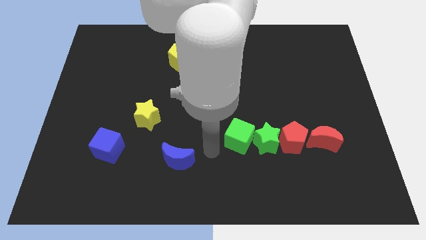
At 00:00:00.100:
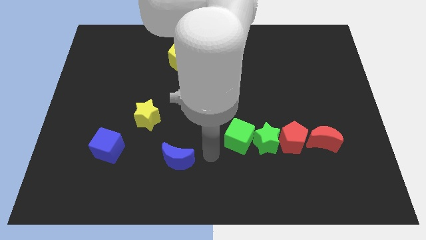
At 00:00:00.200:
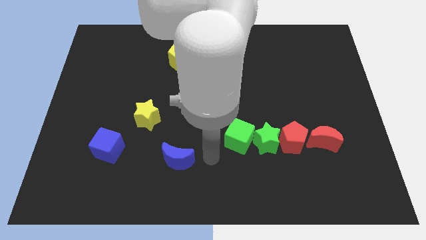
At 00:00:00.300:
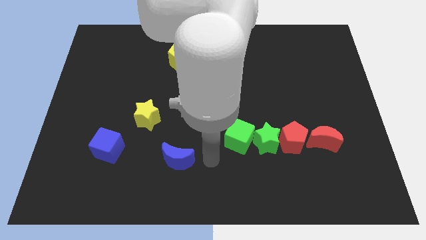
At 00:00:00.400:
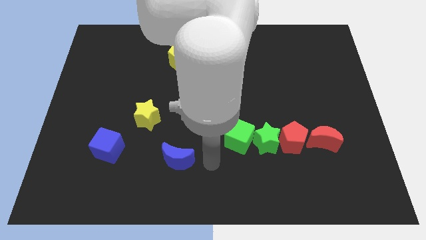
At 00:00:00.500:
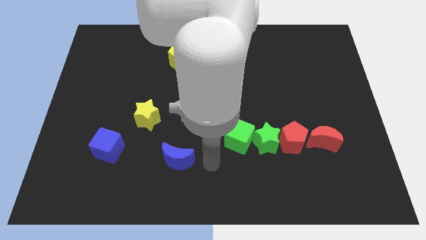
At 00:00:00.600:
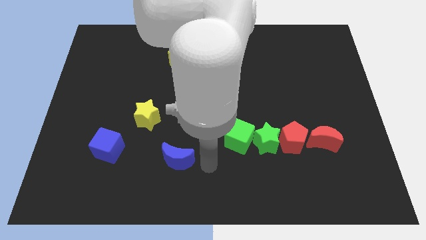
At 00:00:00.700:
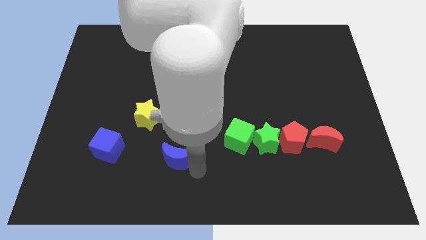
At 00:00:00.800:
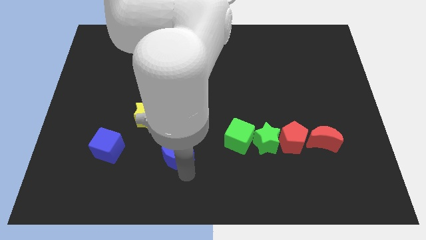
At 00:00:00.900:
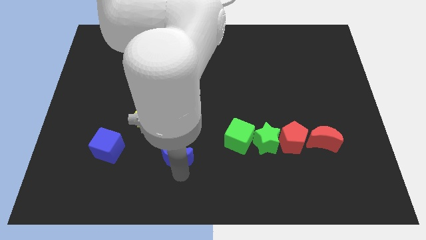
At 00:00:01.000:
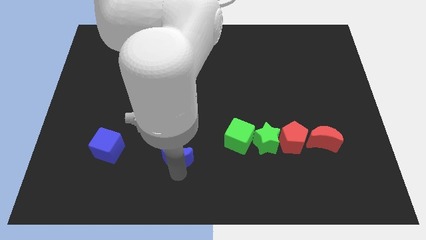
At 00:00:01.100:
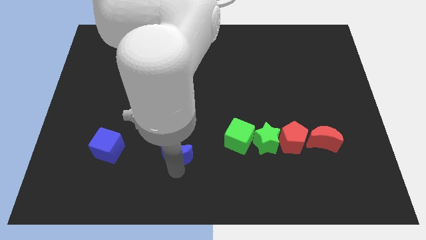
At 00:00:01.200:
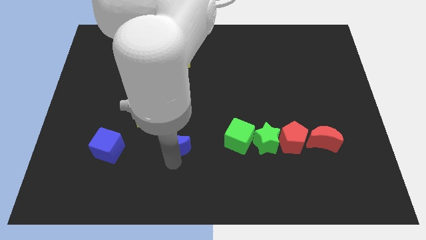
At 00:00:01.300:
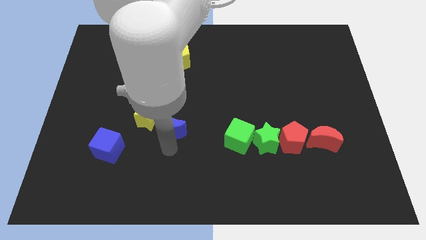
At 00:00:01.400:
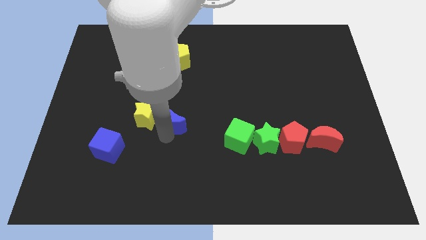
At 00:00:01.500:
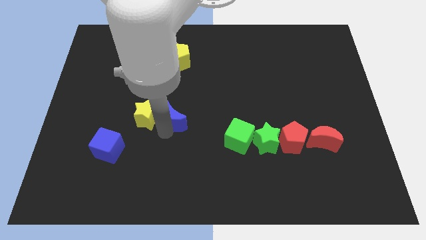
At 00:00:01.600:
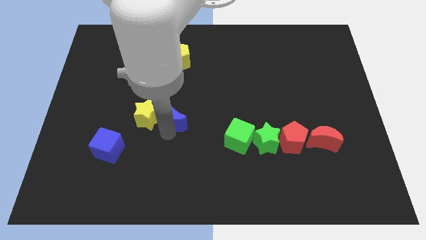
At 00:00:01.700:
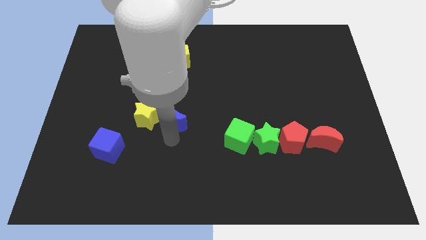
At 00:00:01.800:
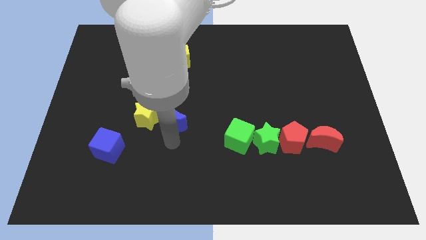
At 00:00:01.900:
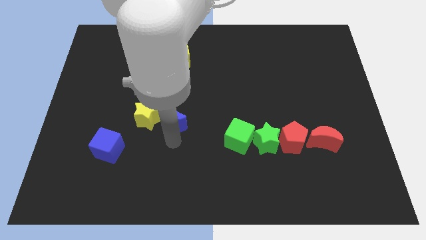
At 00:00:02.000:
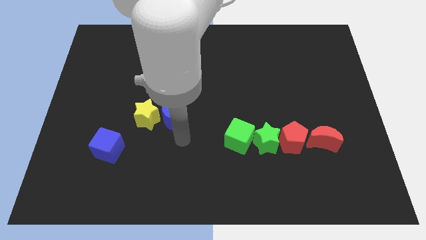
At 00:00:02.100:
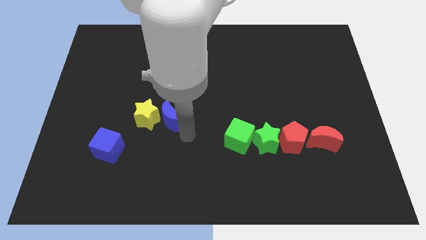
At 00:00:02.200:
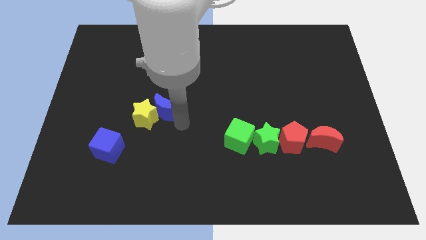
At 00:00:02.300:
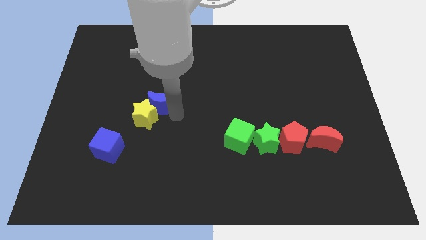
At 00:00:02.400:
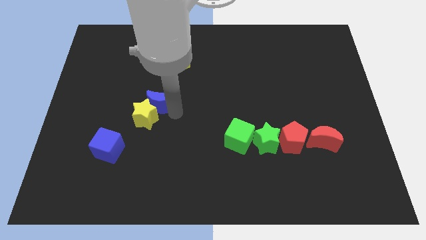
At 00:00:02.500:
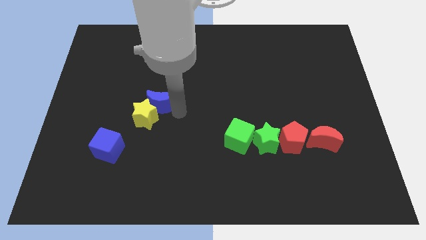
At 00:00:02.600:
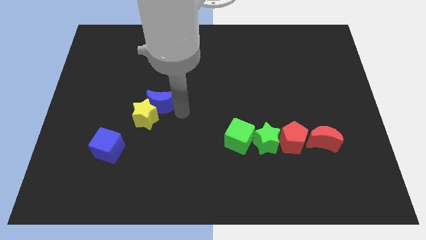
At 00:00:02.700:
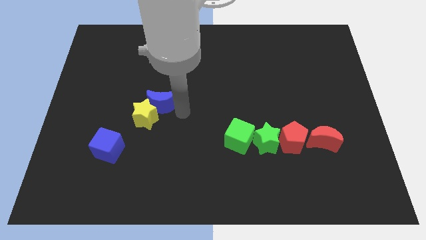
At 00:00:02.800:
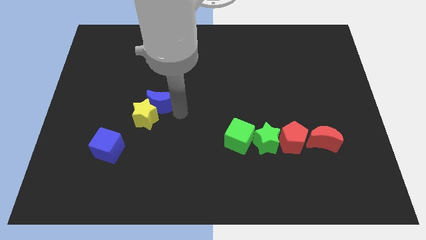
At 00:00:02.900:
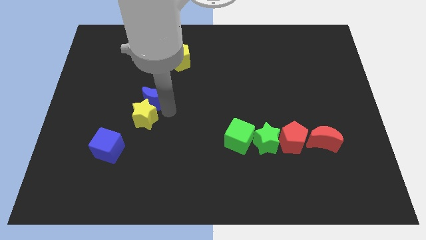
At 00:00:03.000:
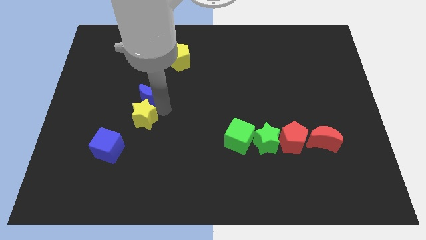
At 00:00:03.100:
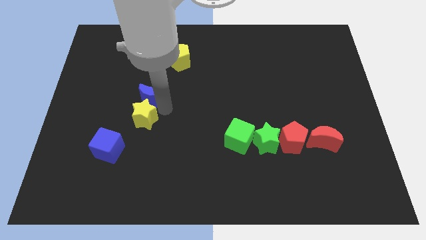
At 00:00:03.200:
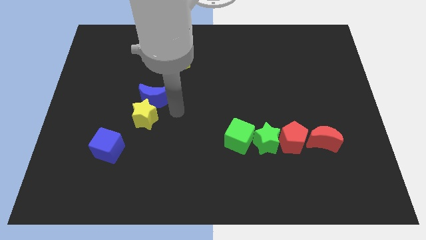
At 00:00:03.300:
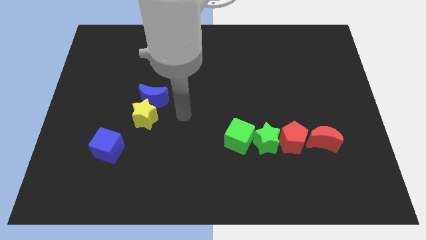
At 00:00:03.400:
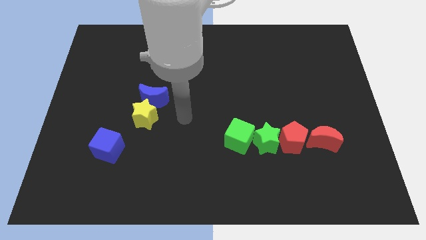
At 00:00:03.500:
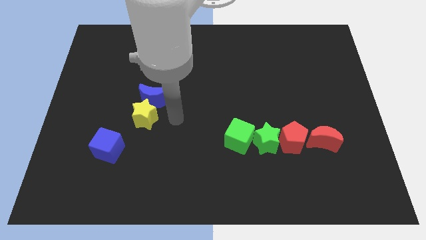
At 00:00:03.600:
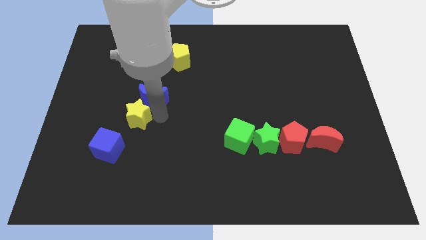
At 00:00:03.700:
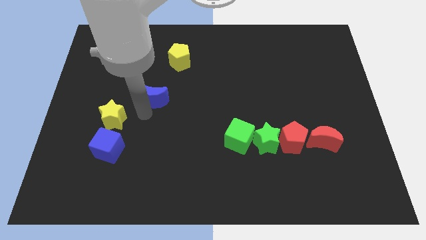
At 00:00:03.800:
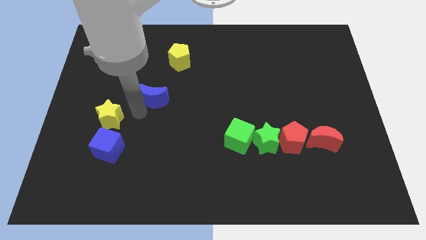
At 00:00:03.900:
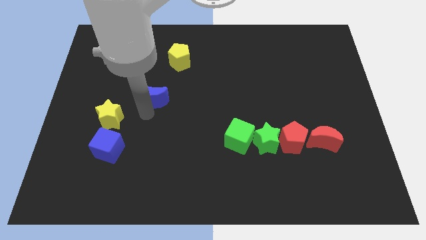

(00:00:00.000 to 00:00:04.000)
move the blue moon towards the yellow pentagon

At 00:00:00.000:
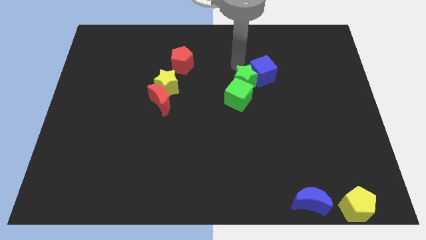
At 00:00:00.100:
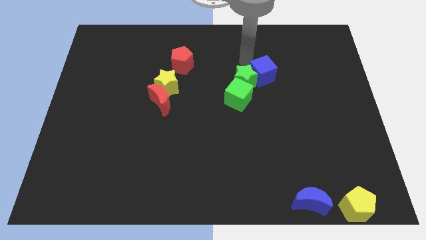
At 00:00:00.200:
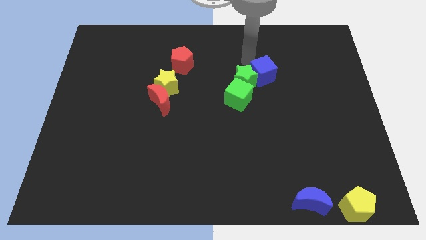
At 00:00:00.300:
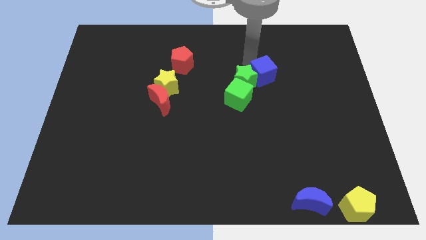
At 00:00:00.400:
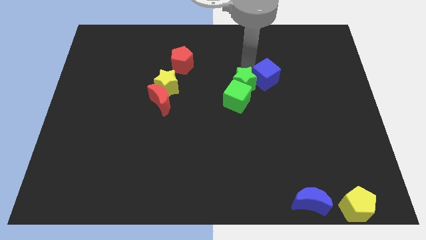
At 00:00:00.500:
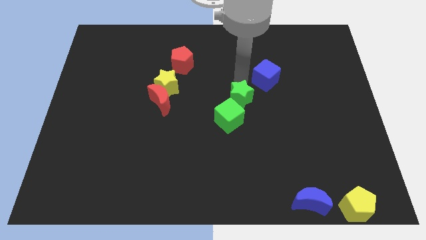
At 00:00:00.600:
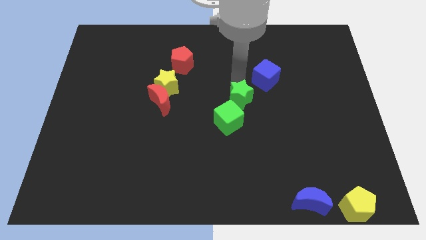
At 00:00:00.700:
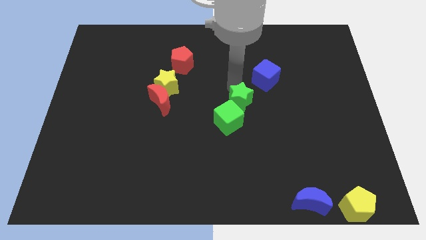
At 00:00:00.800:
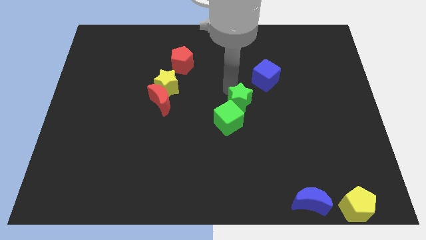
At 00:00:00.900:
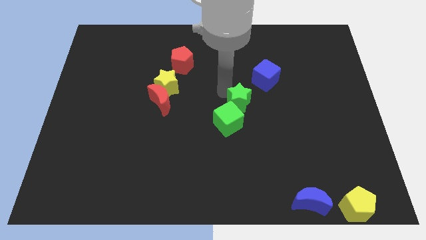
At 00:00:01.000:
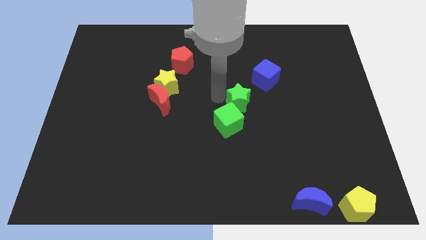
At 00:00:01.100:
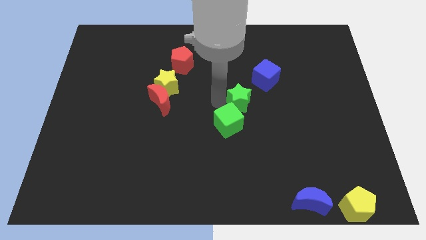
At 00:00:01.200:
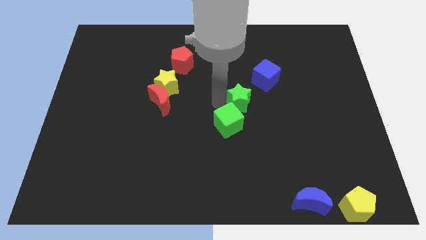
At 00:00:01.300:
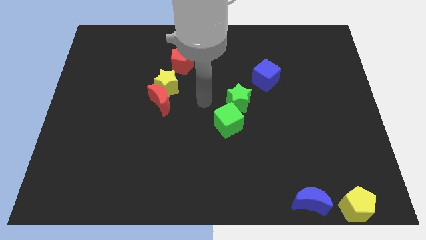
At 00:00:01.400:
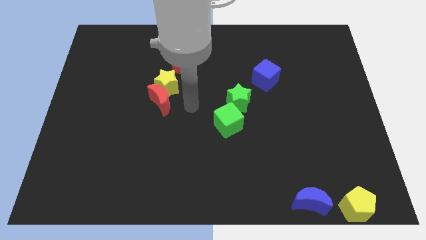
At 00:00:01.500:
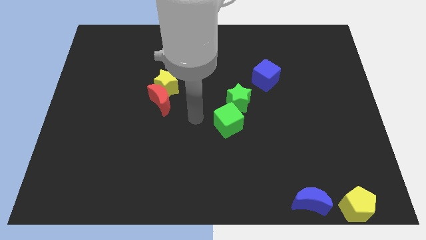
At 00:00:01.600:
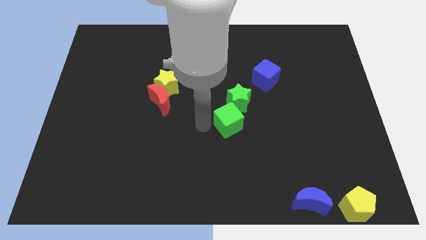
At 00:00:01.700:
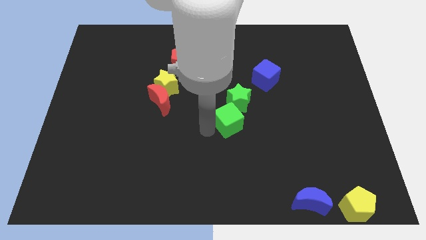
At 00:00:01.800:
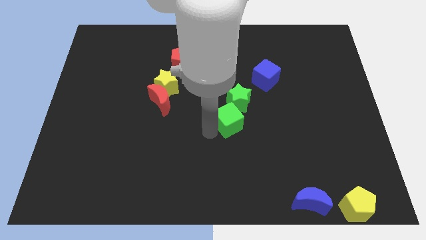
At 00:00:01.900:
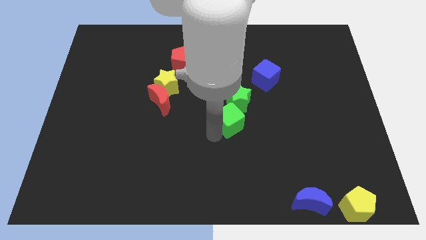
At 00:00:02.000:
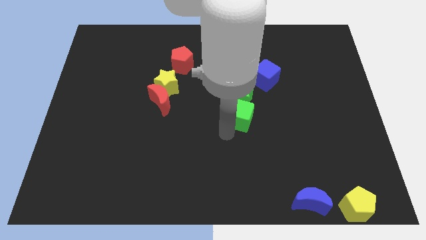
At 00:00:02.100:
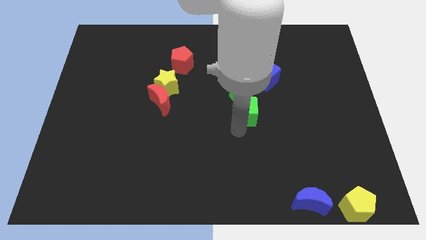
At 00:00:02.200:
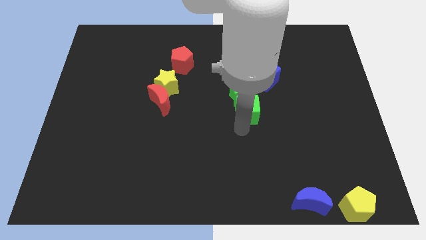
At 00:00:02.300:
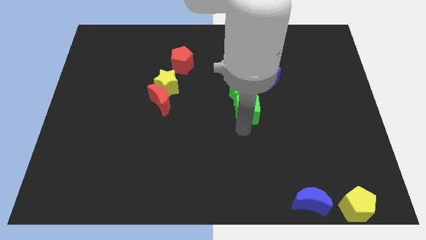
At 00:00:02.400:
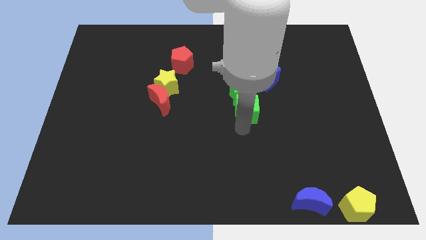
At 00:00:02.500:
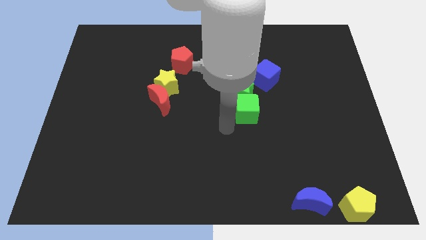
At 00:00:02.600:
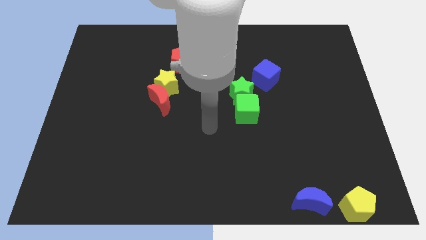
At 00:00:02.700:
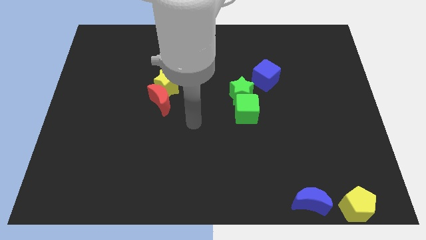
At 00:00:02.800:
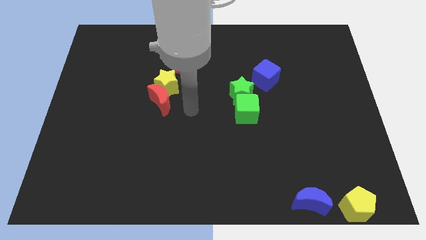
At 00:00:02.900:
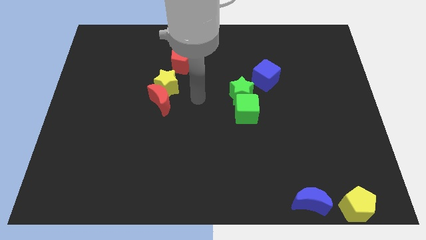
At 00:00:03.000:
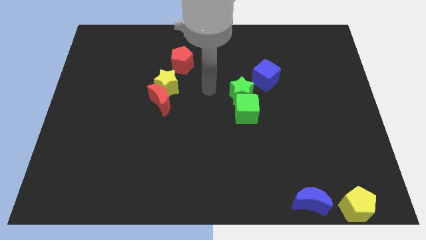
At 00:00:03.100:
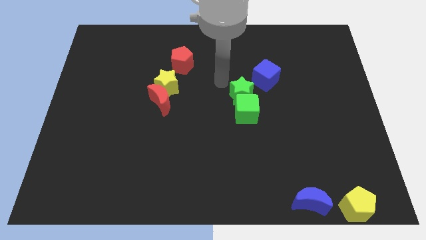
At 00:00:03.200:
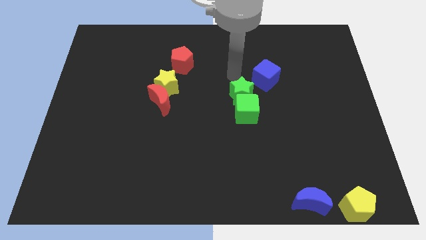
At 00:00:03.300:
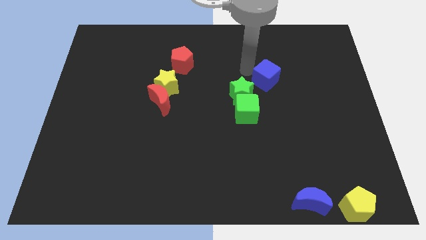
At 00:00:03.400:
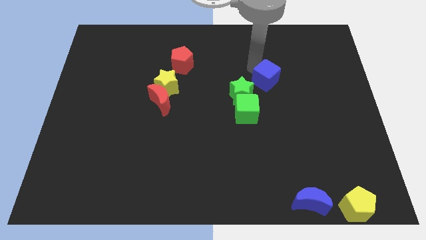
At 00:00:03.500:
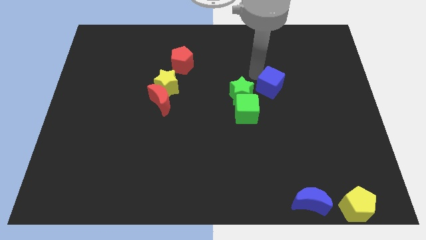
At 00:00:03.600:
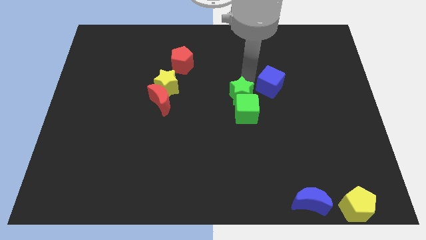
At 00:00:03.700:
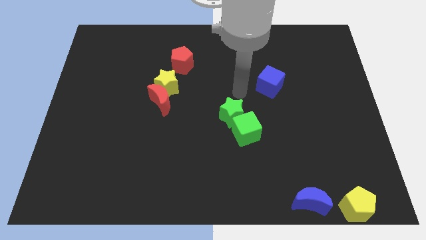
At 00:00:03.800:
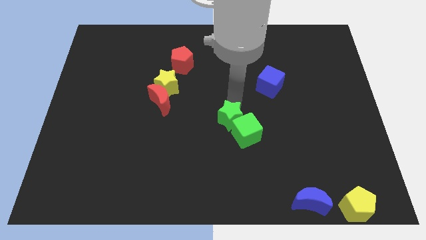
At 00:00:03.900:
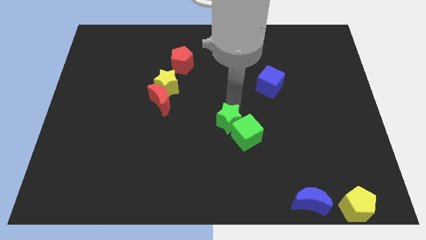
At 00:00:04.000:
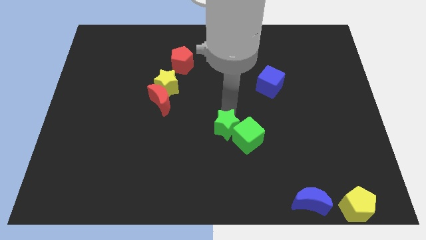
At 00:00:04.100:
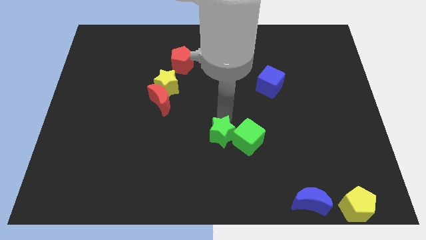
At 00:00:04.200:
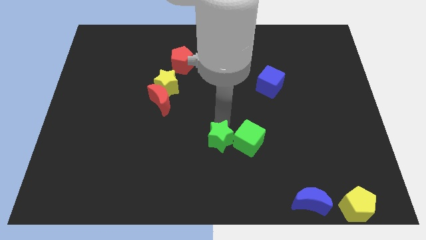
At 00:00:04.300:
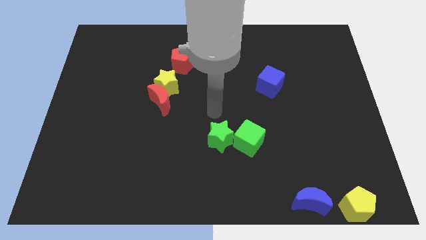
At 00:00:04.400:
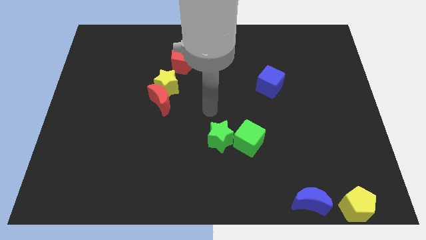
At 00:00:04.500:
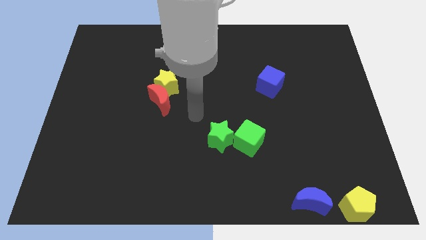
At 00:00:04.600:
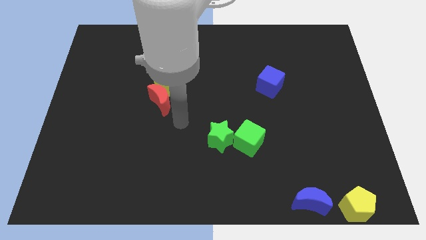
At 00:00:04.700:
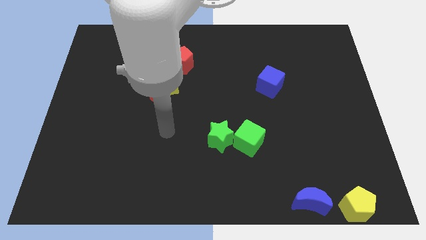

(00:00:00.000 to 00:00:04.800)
push the green star downwards slightly
